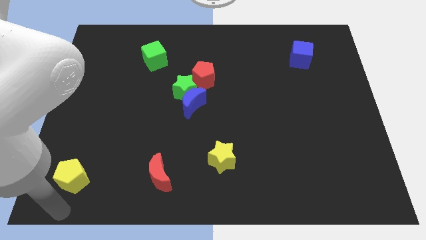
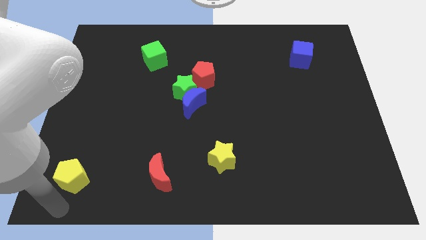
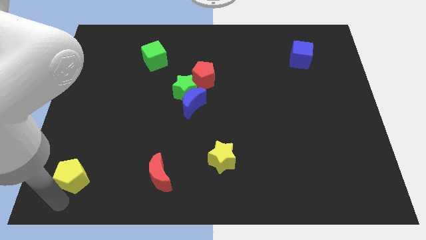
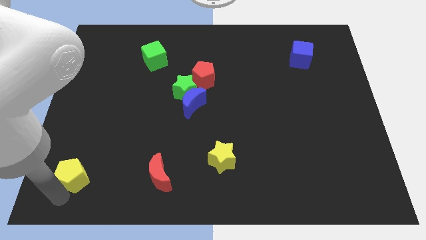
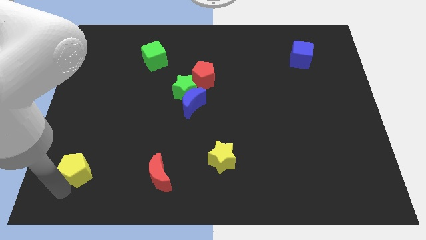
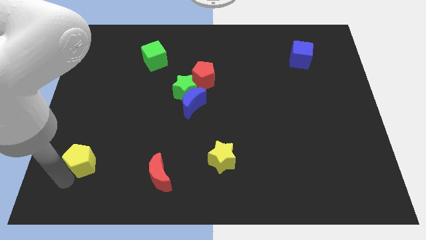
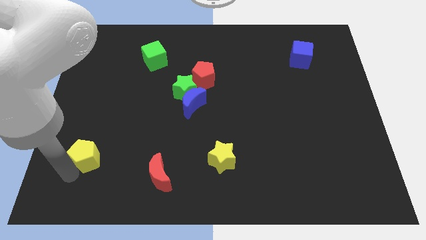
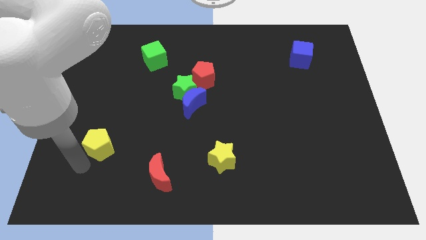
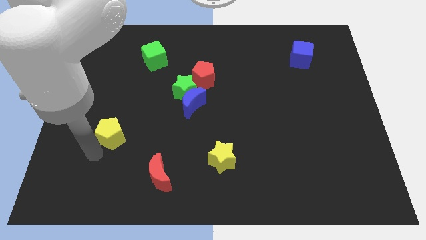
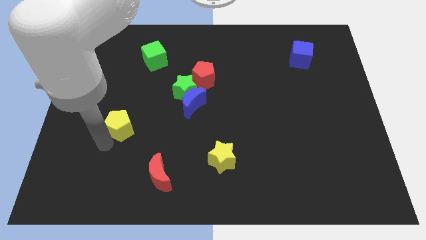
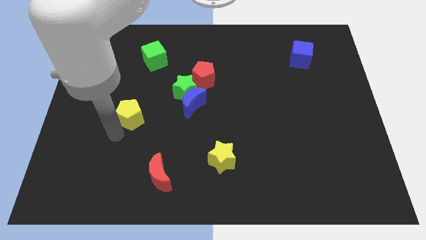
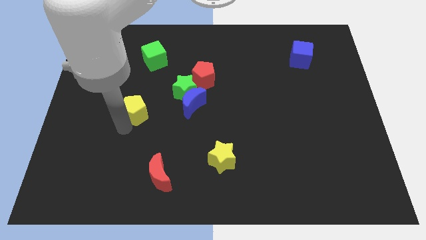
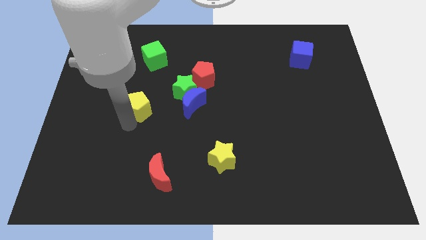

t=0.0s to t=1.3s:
place the yellow pentagon left to the blue moon

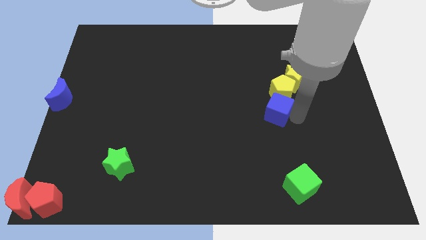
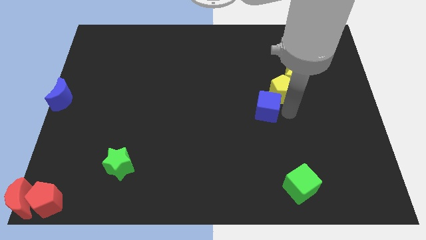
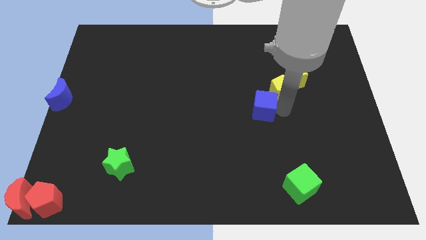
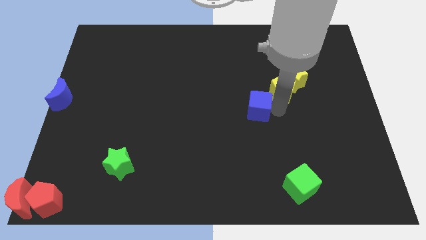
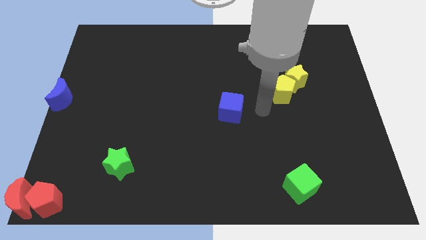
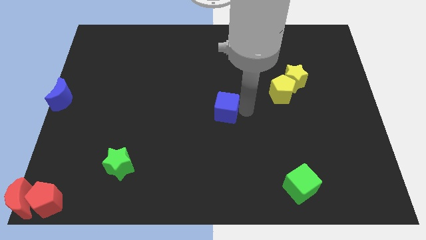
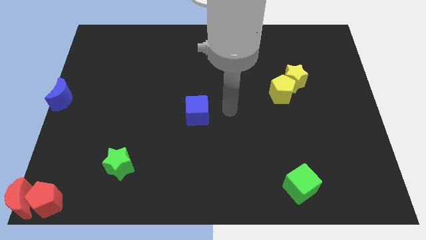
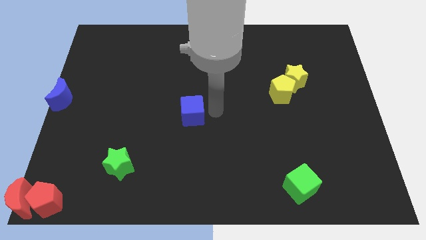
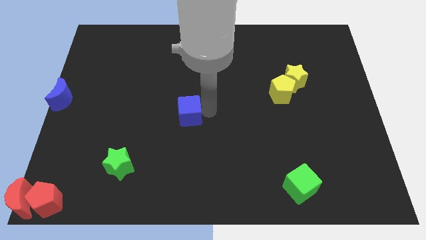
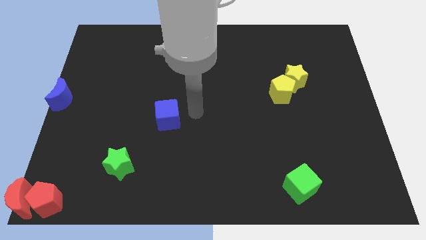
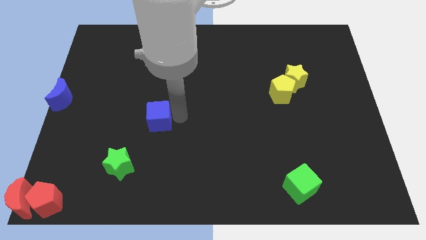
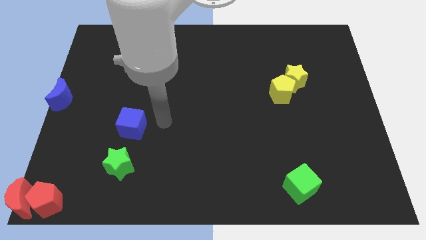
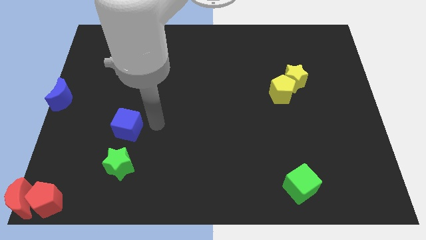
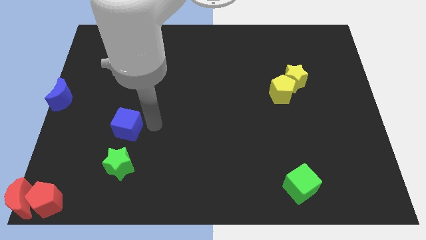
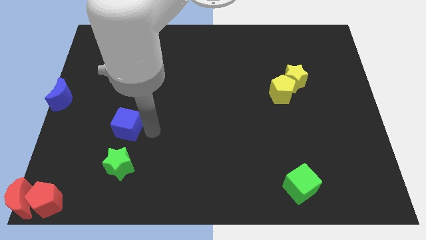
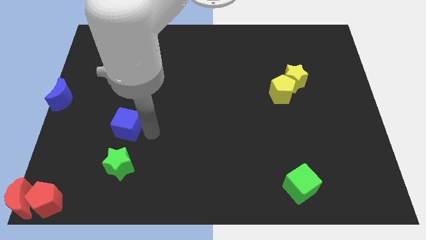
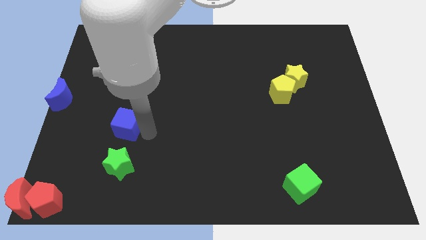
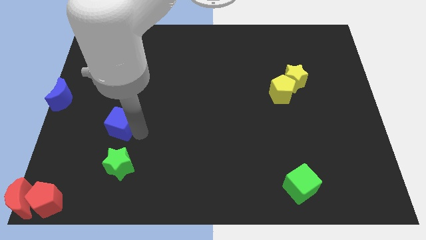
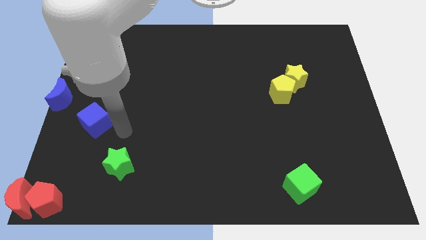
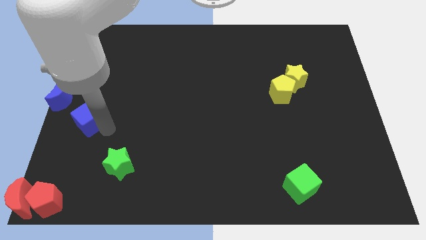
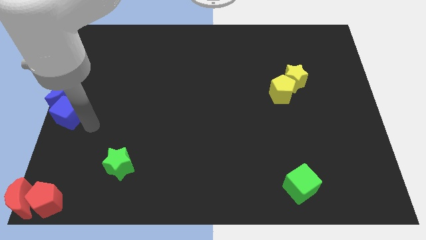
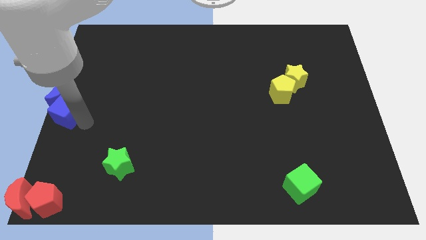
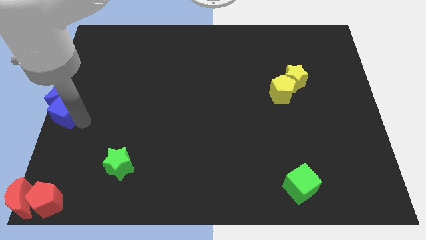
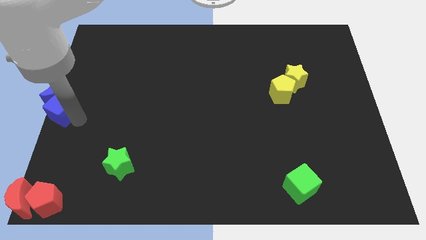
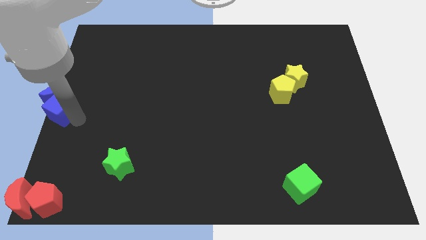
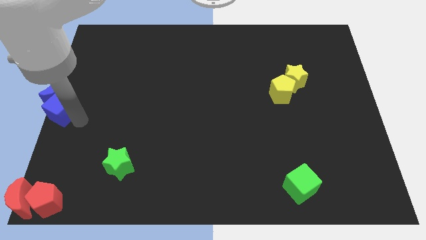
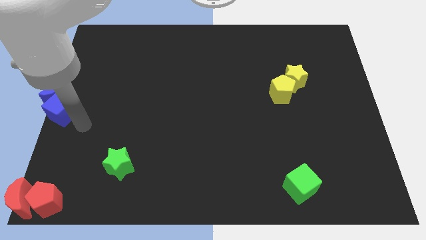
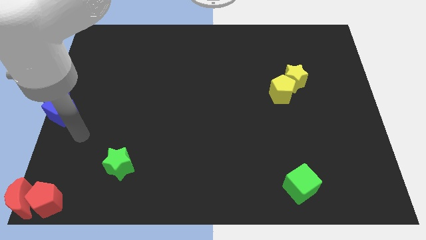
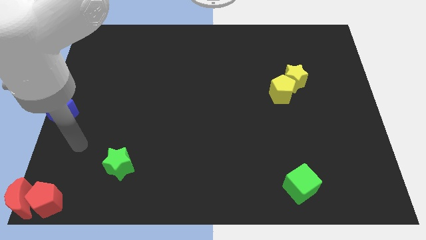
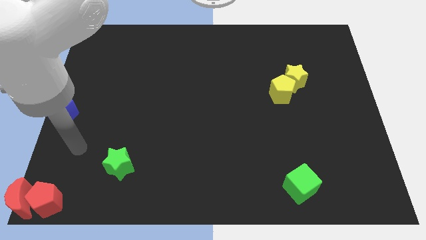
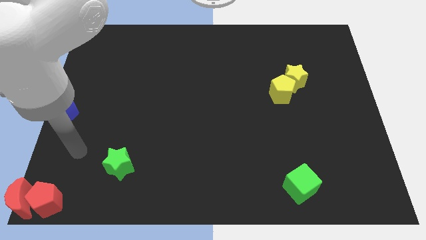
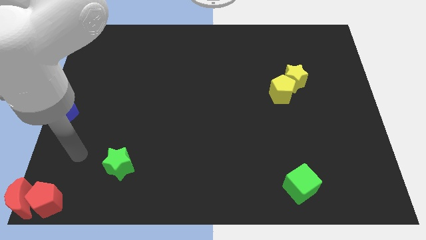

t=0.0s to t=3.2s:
separate blue cube from yellow pentagon

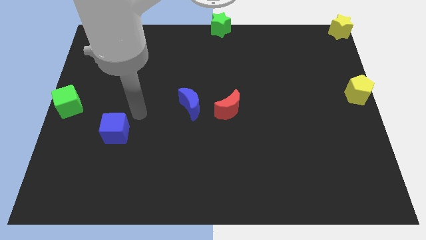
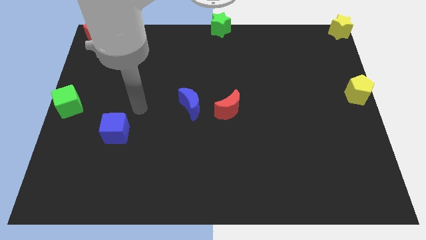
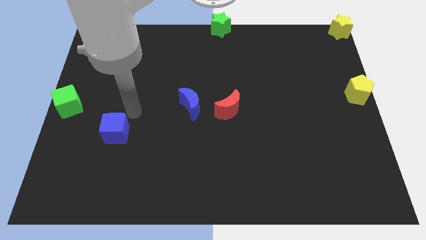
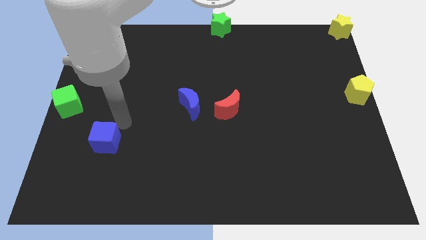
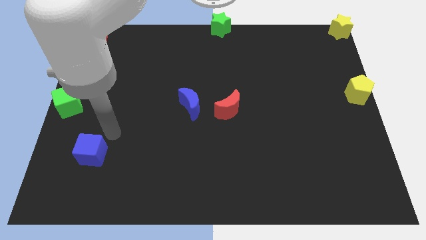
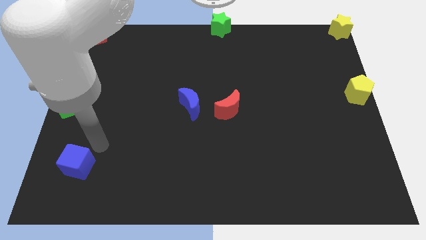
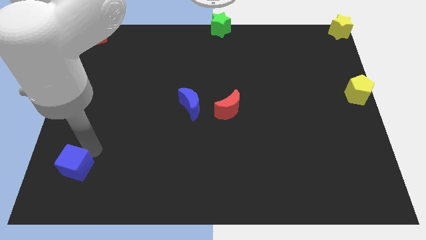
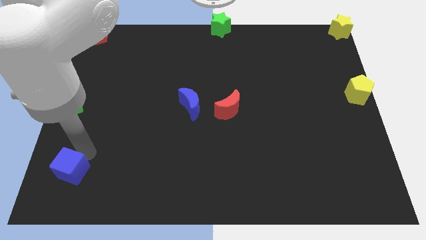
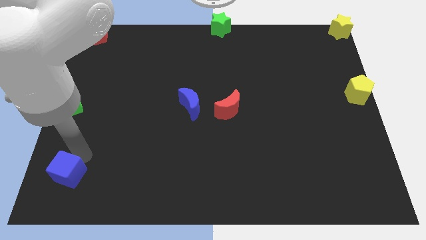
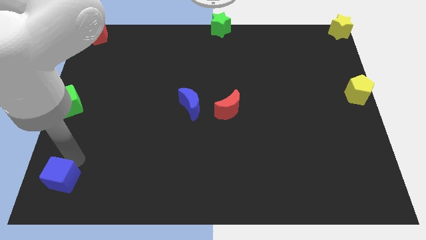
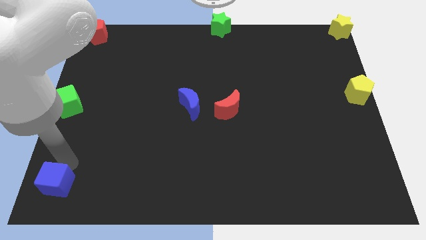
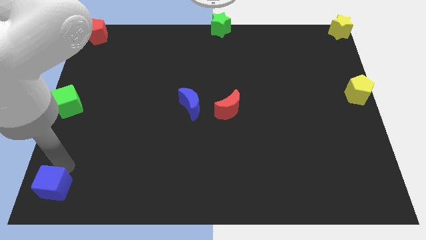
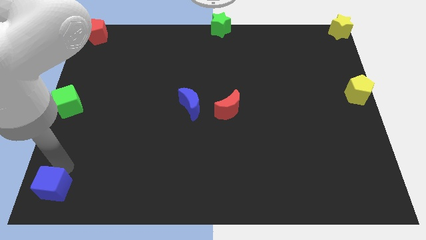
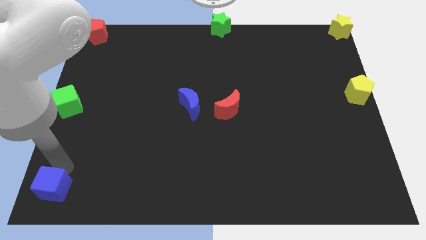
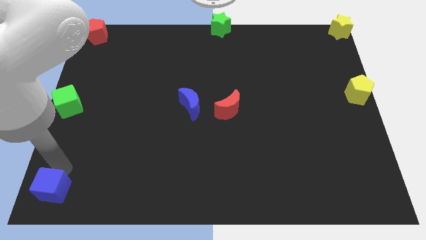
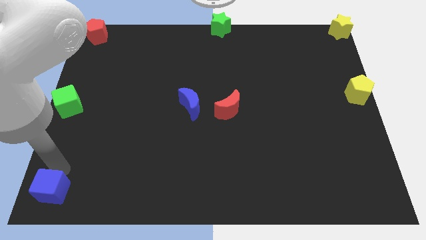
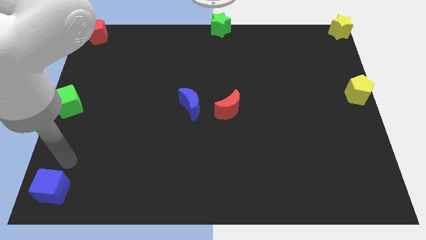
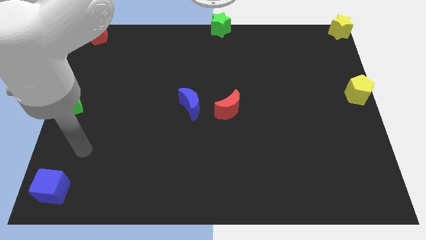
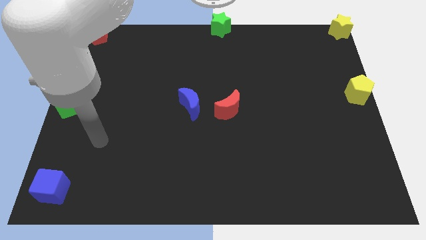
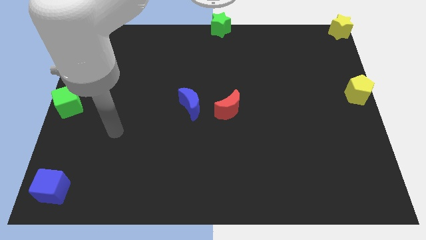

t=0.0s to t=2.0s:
drag the blue cube towards the bottom left corner of the board

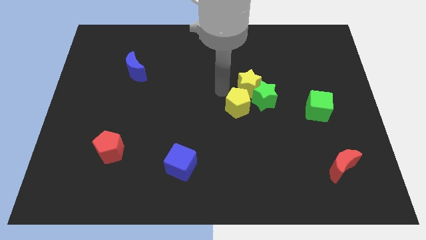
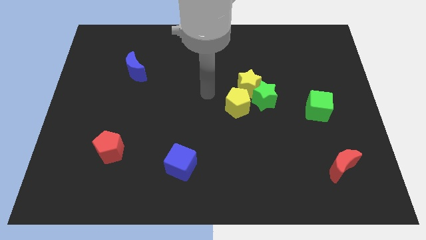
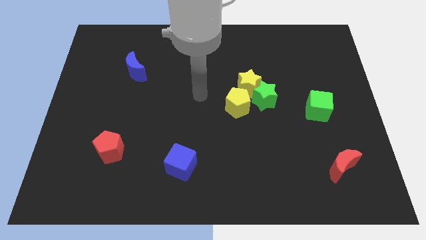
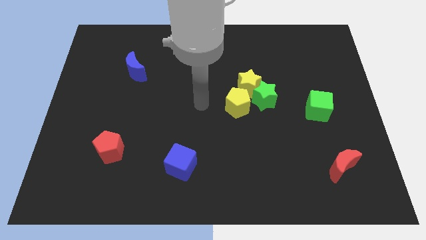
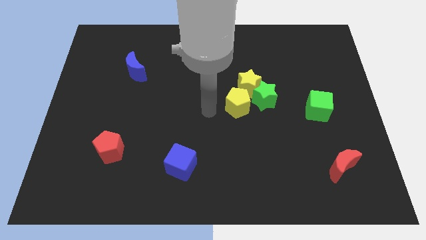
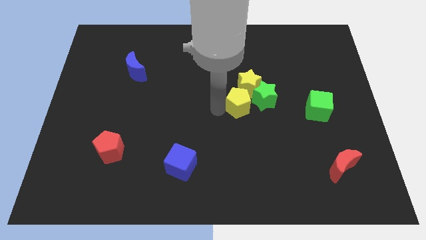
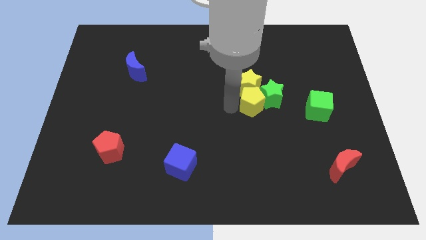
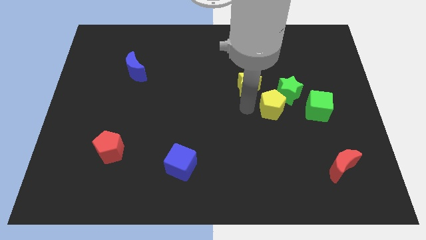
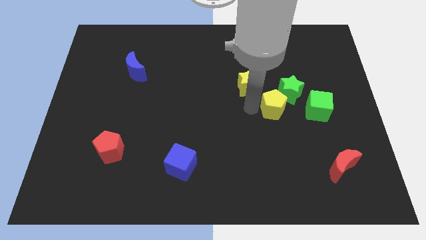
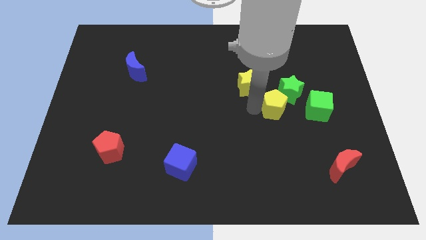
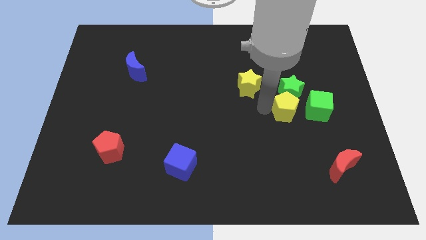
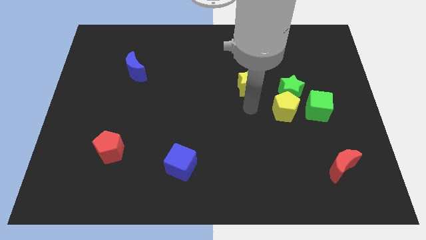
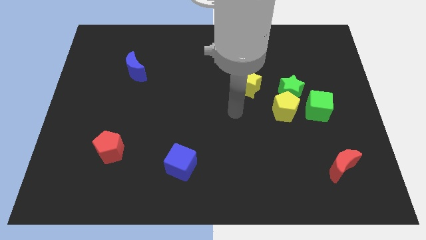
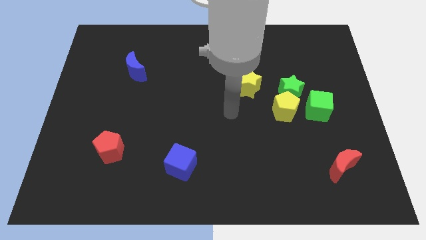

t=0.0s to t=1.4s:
separate yellow pentagon and the green star from the yellow star

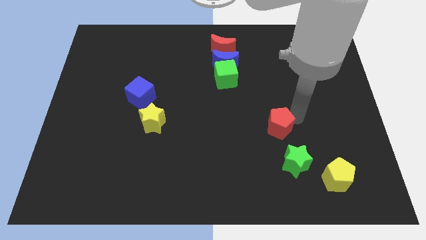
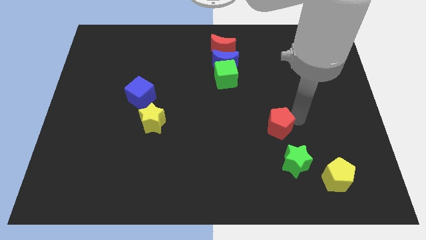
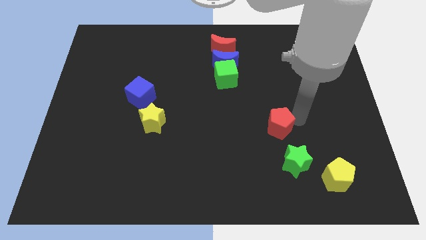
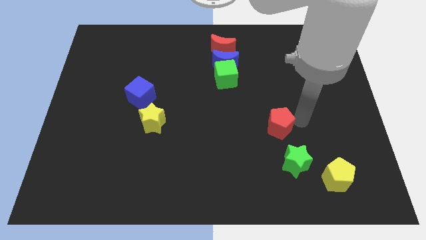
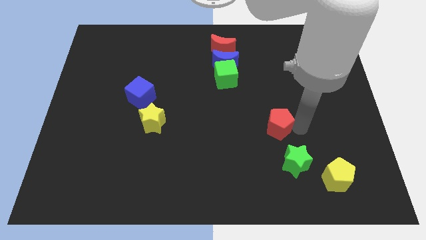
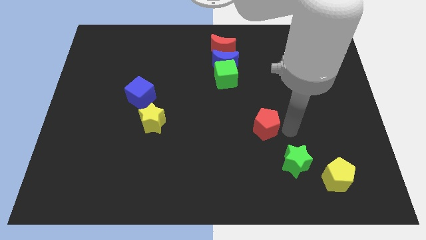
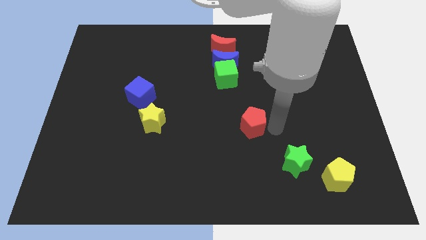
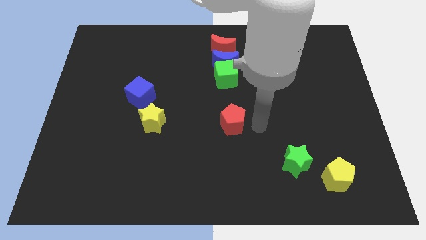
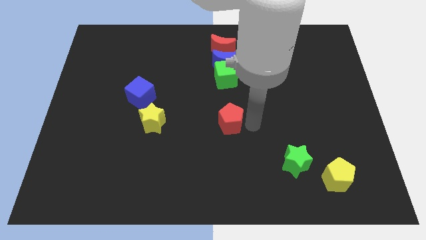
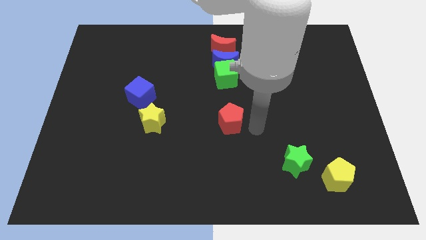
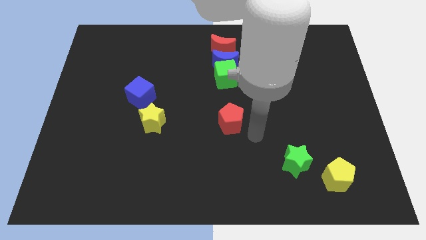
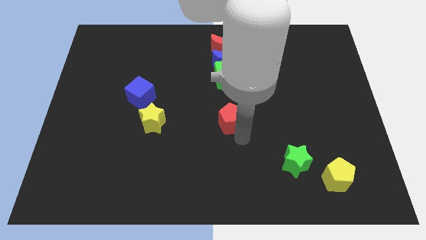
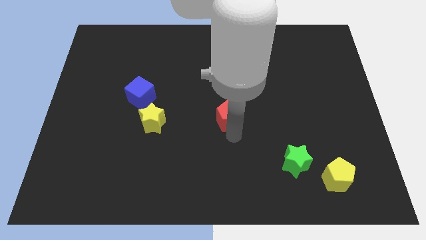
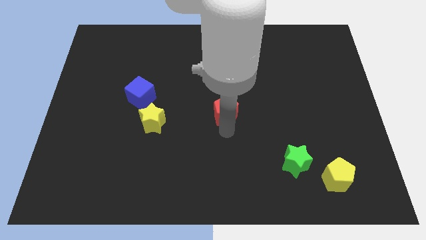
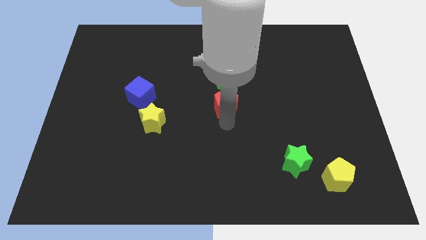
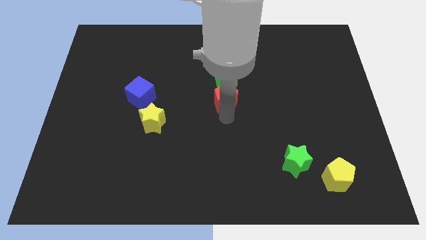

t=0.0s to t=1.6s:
move the red pentagon vertically below the green cube
